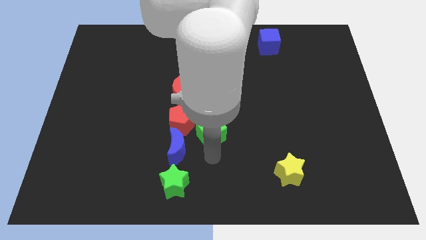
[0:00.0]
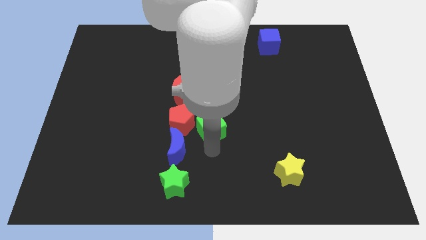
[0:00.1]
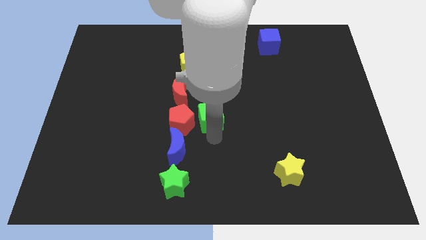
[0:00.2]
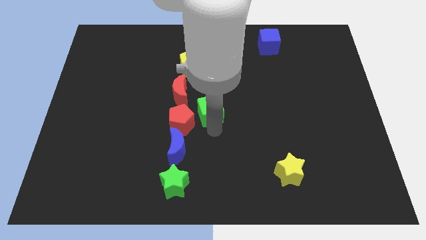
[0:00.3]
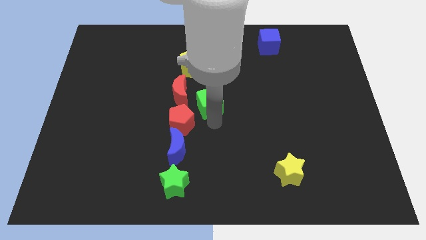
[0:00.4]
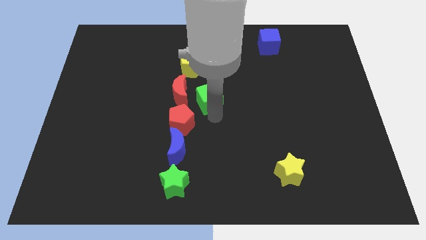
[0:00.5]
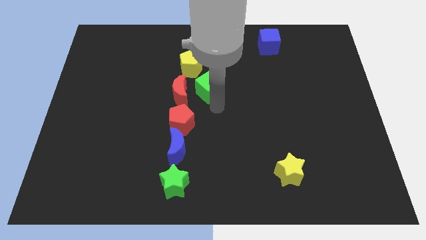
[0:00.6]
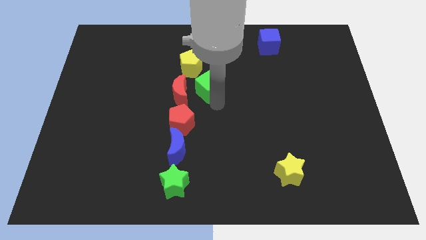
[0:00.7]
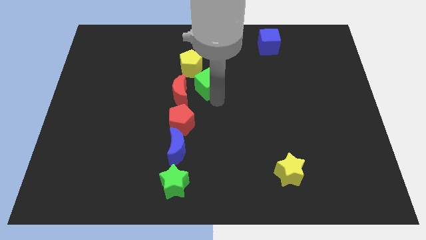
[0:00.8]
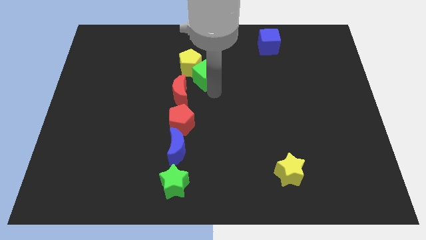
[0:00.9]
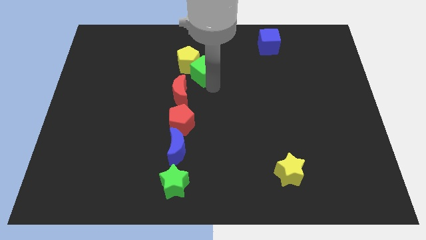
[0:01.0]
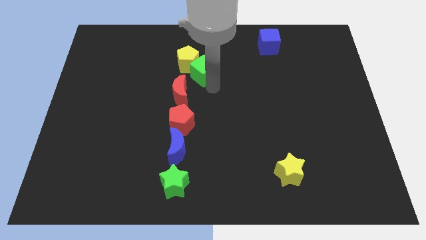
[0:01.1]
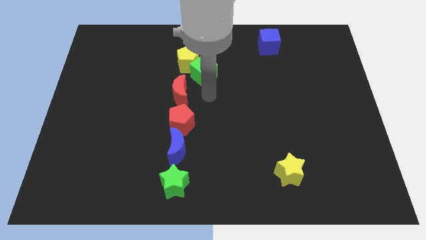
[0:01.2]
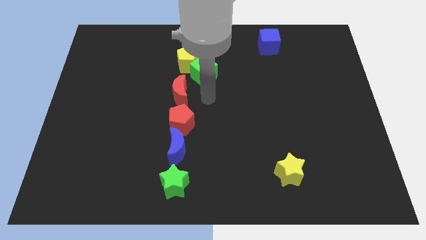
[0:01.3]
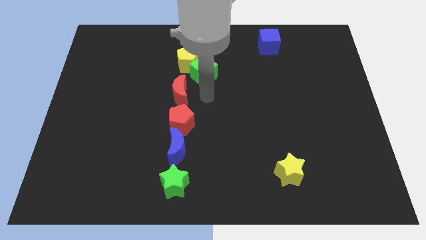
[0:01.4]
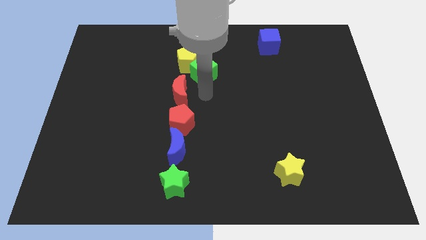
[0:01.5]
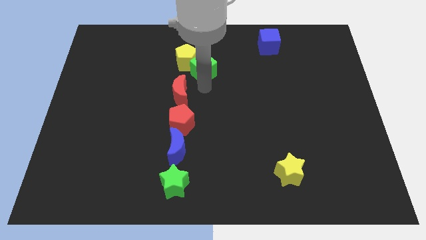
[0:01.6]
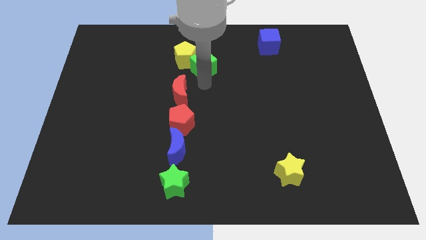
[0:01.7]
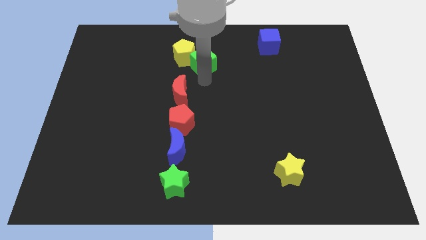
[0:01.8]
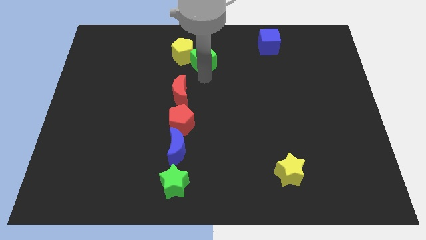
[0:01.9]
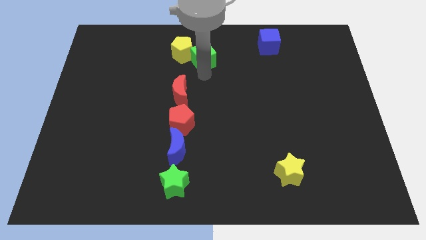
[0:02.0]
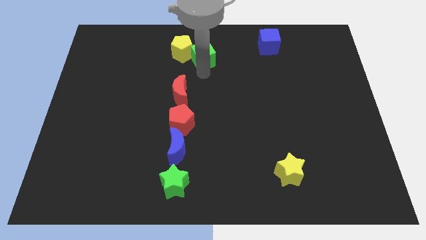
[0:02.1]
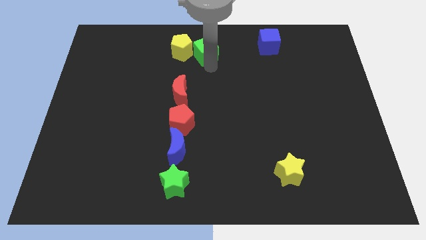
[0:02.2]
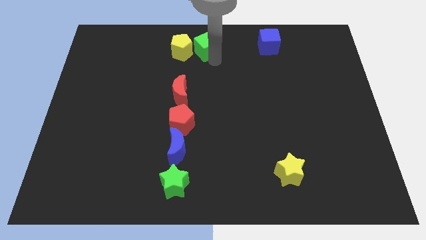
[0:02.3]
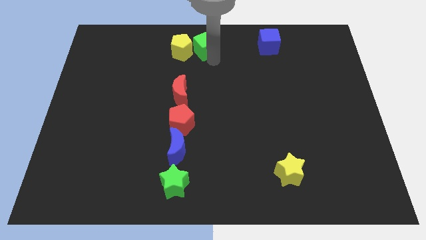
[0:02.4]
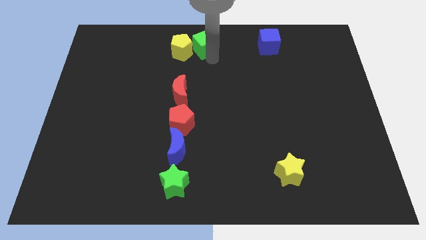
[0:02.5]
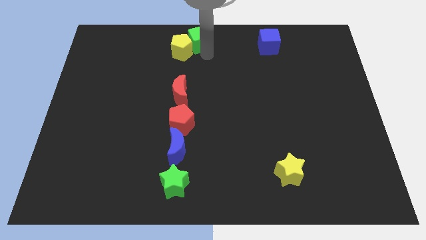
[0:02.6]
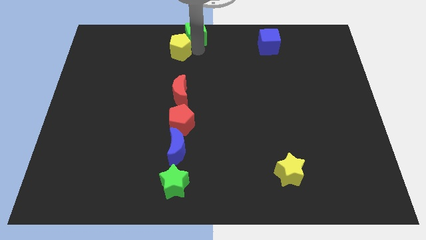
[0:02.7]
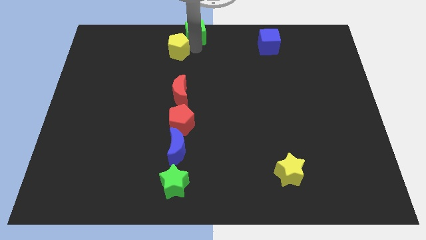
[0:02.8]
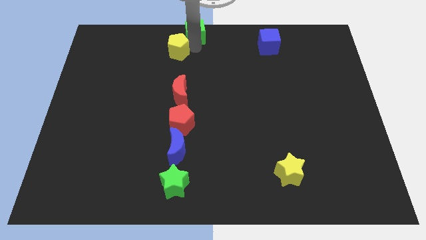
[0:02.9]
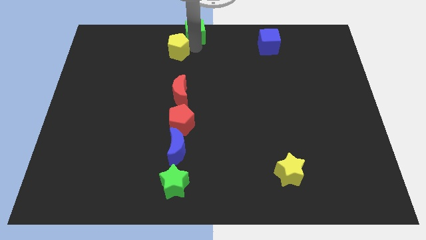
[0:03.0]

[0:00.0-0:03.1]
place green cube to the top center of the boartd

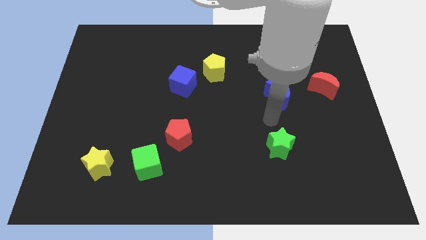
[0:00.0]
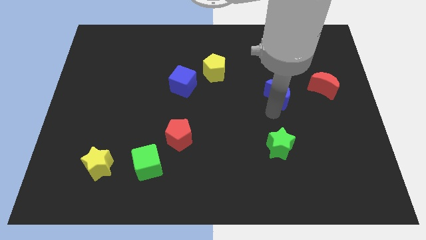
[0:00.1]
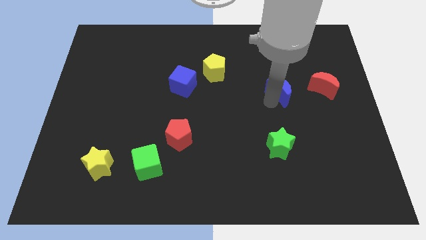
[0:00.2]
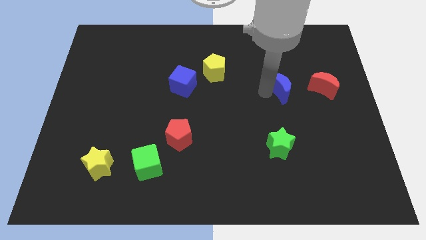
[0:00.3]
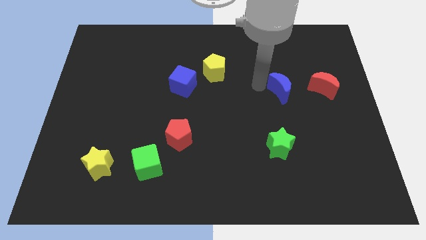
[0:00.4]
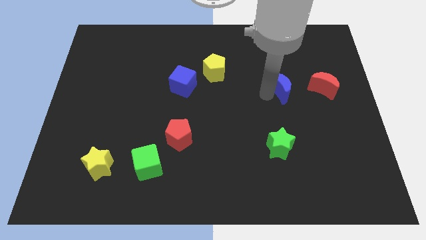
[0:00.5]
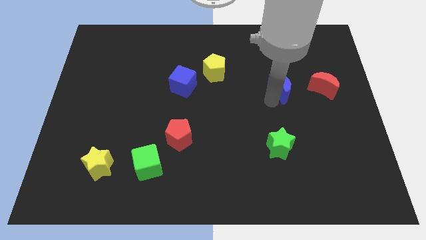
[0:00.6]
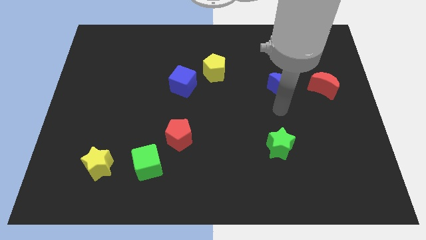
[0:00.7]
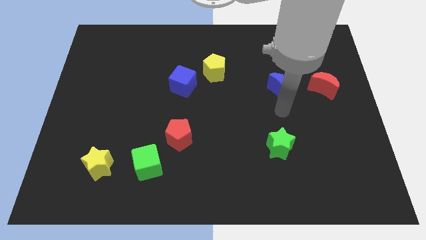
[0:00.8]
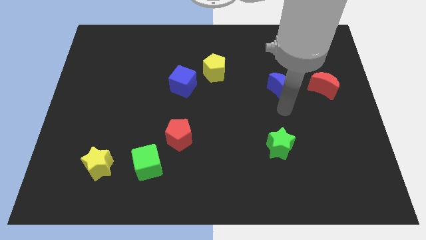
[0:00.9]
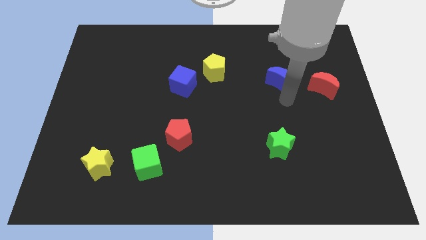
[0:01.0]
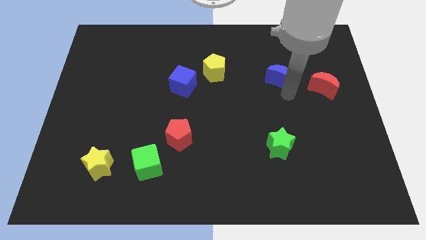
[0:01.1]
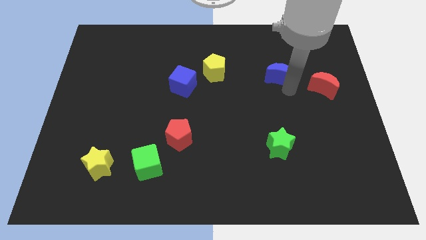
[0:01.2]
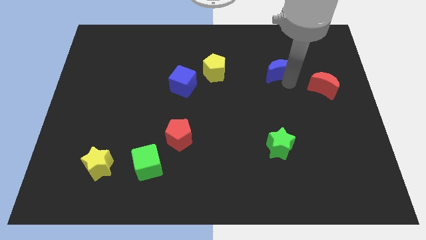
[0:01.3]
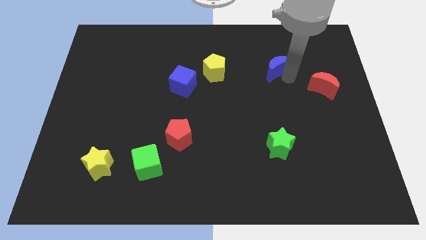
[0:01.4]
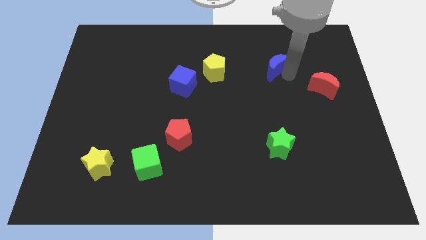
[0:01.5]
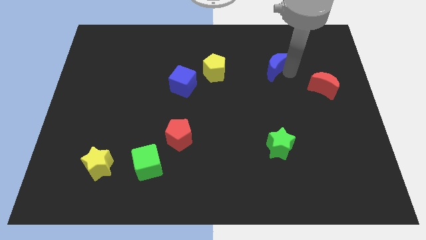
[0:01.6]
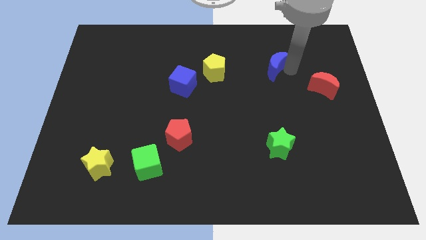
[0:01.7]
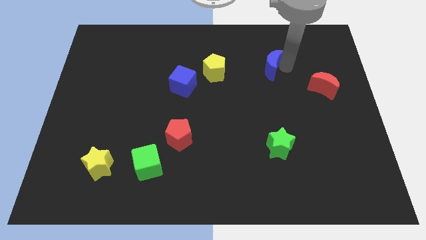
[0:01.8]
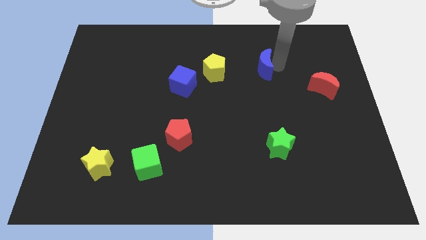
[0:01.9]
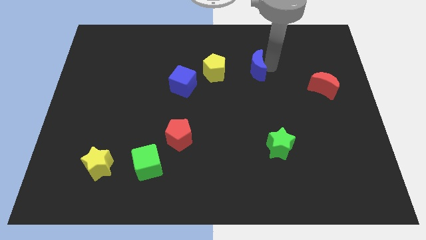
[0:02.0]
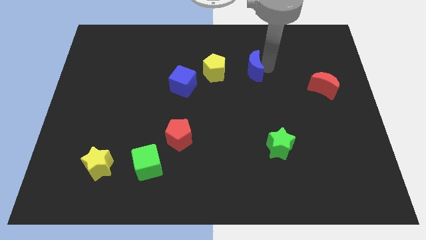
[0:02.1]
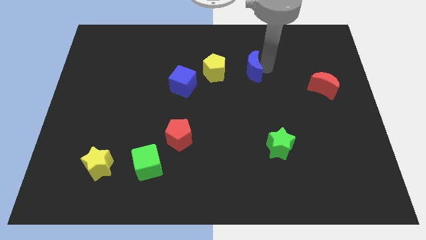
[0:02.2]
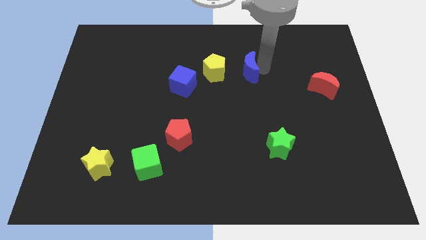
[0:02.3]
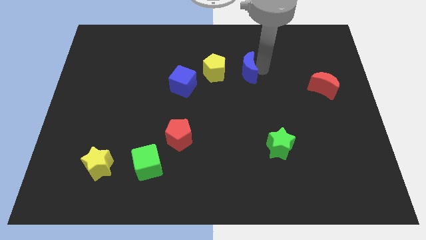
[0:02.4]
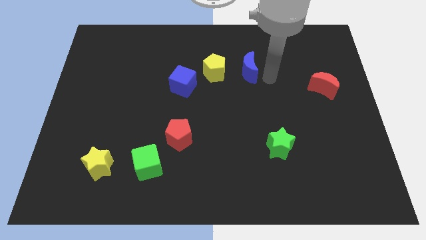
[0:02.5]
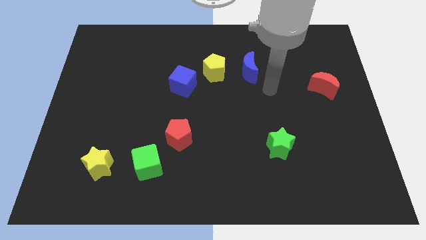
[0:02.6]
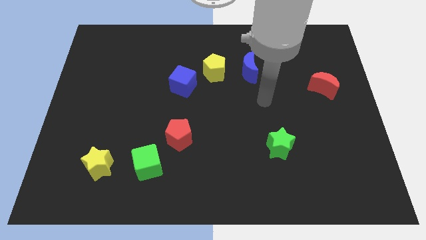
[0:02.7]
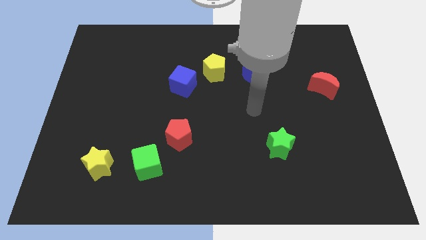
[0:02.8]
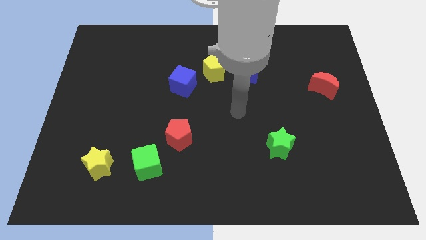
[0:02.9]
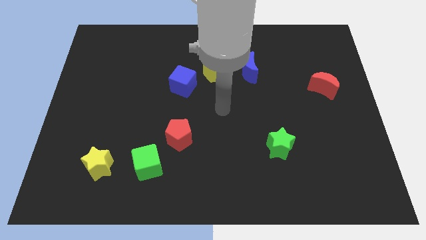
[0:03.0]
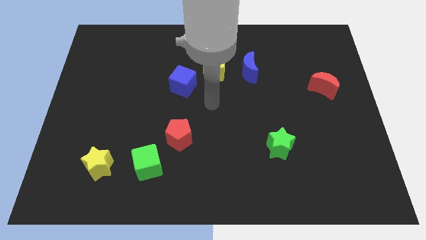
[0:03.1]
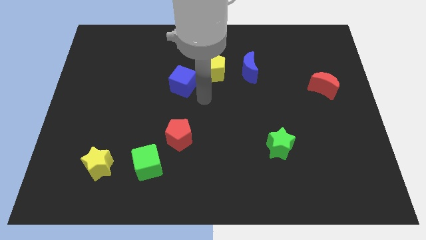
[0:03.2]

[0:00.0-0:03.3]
move the blue crescent to the right of the yellow pentagon

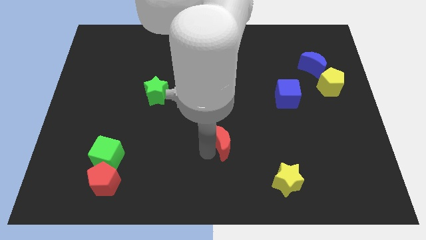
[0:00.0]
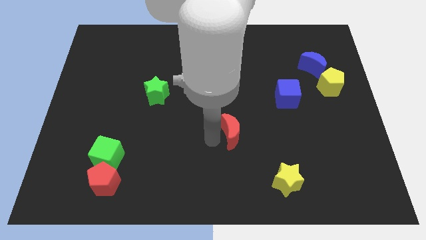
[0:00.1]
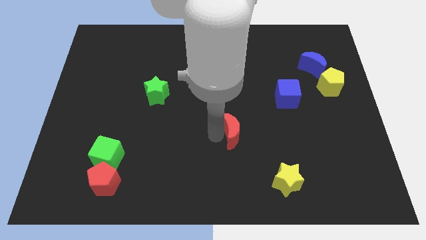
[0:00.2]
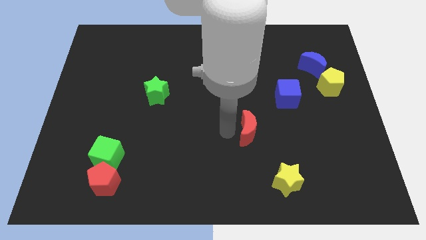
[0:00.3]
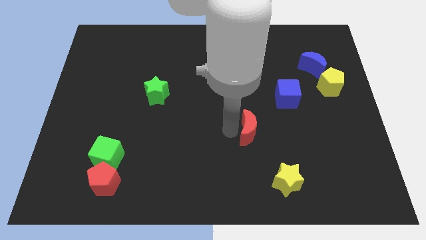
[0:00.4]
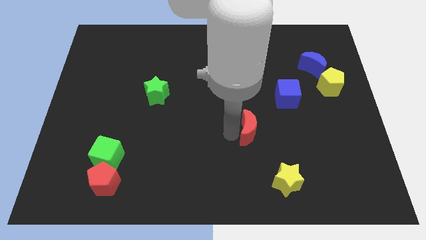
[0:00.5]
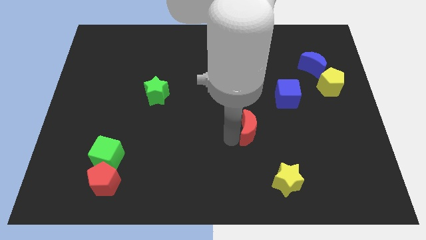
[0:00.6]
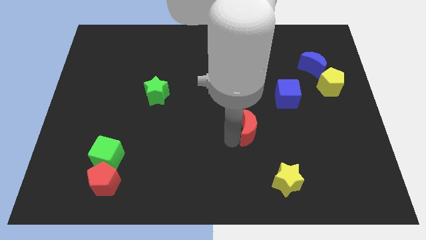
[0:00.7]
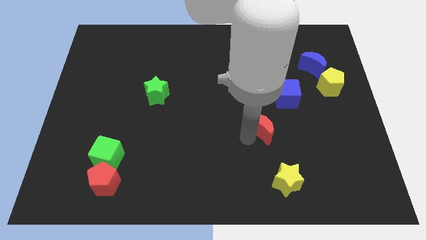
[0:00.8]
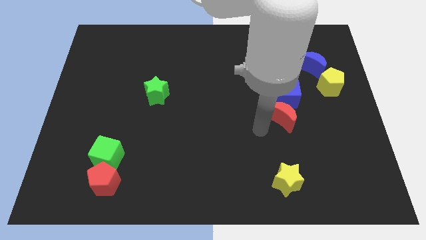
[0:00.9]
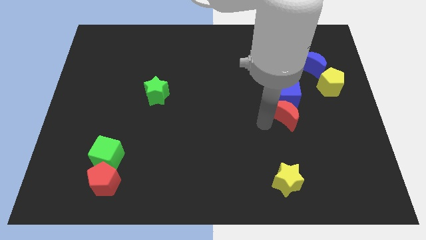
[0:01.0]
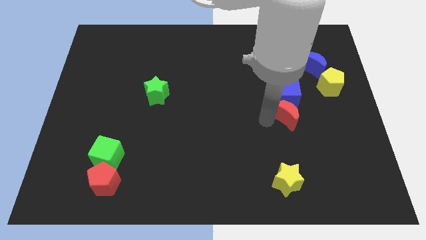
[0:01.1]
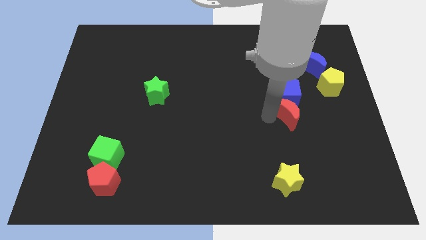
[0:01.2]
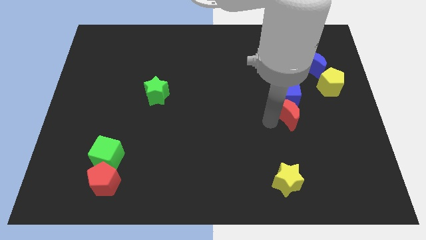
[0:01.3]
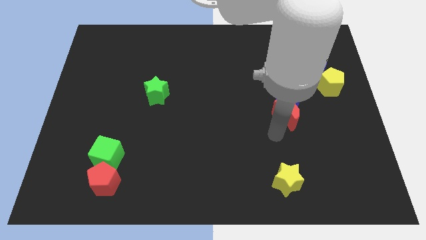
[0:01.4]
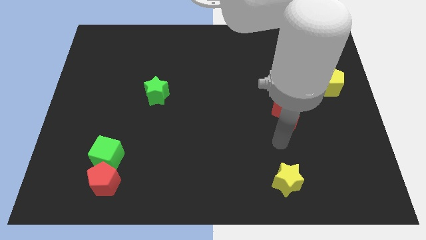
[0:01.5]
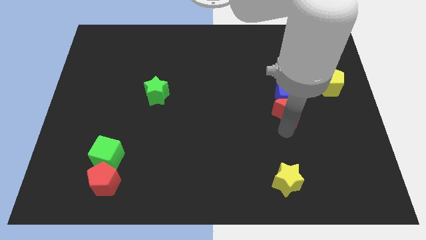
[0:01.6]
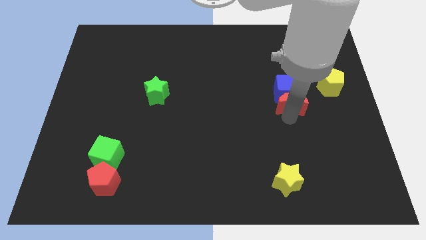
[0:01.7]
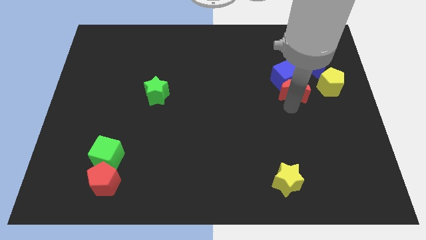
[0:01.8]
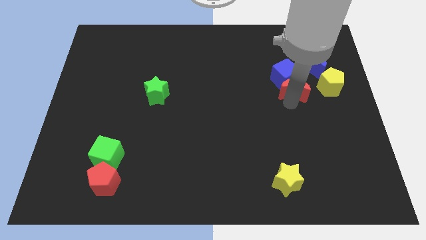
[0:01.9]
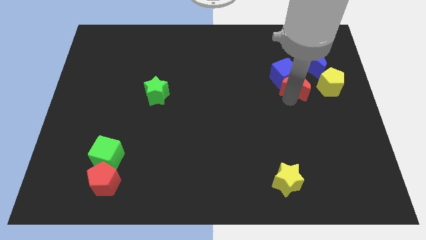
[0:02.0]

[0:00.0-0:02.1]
push red crescent into blue cube

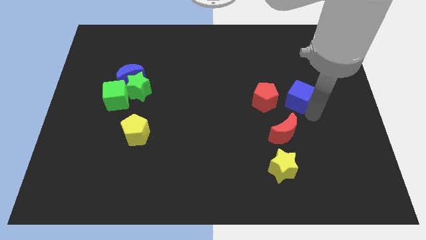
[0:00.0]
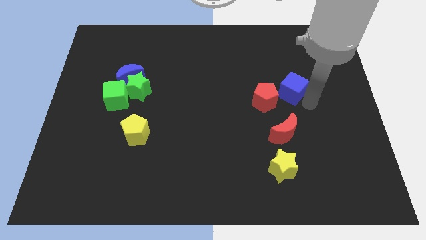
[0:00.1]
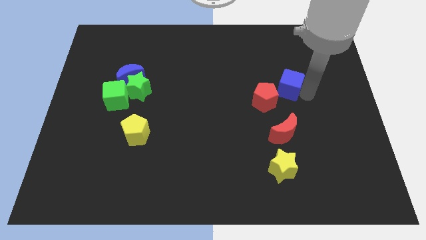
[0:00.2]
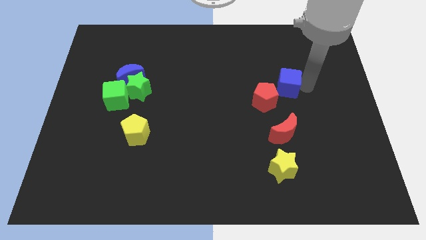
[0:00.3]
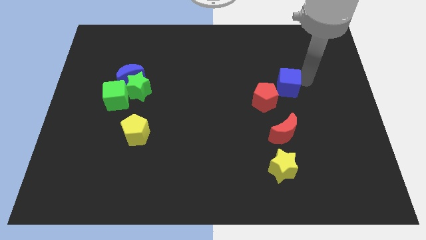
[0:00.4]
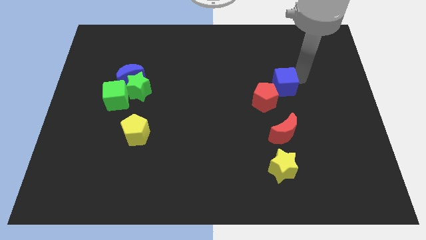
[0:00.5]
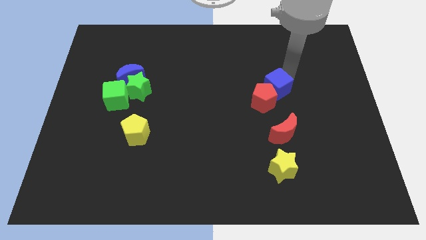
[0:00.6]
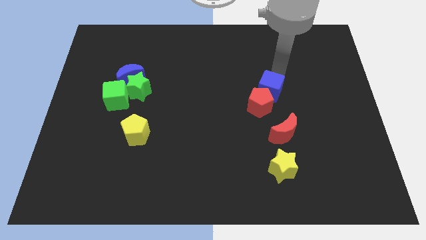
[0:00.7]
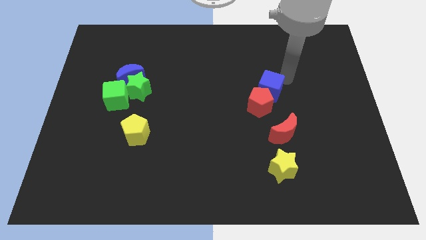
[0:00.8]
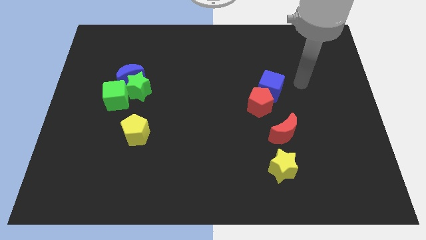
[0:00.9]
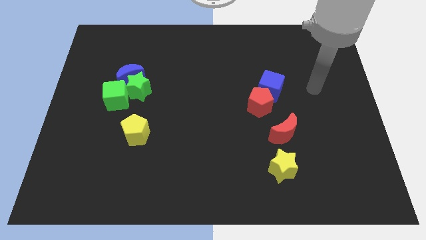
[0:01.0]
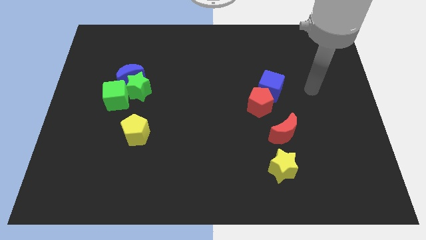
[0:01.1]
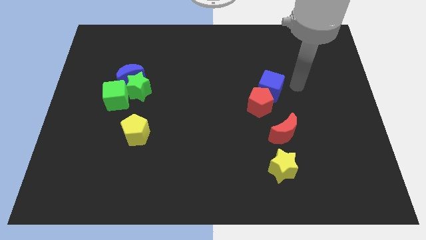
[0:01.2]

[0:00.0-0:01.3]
push the blue cube close to the red pentagon
